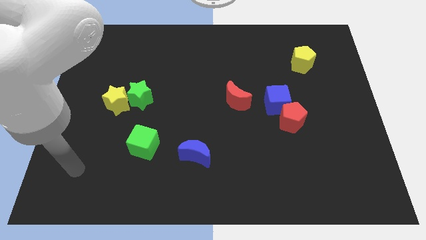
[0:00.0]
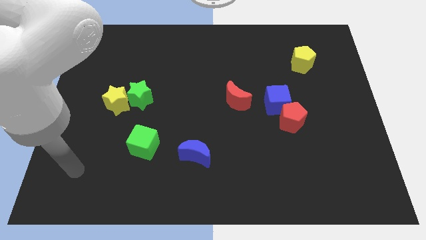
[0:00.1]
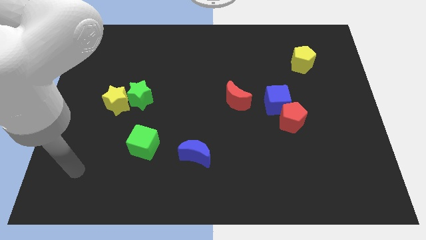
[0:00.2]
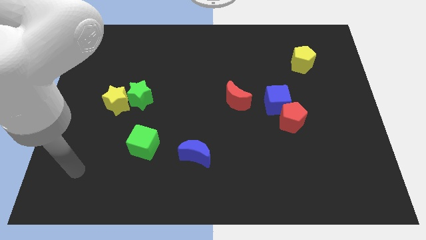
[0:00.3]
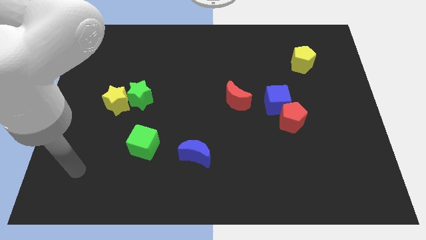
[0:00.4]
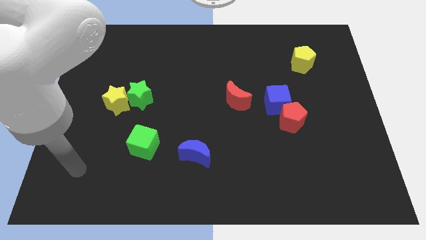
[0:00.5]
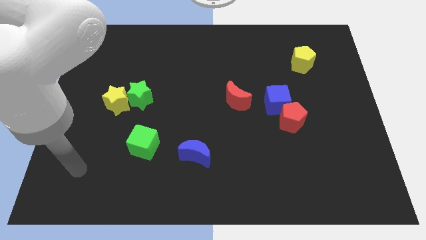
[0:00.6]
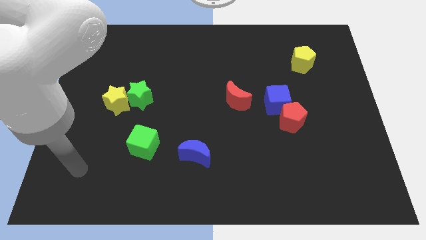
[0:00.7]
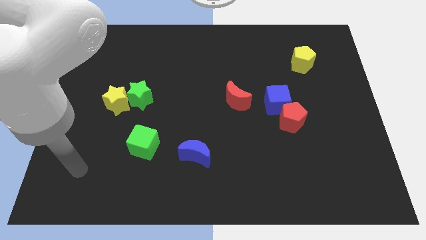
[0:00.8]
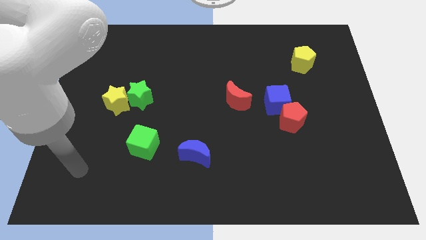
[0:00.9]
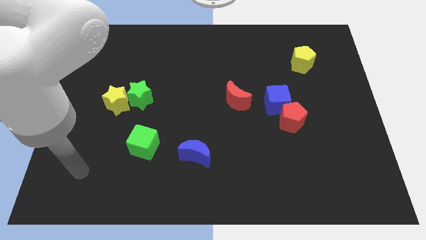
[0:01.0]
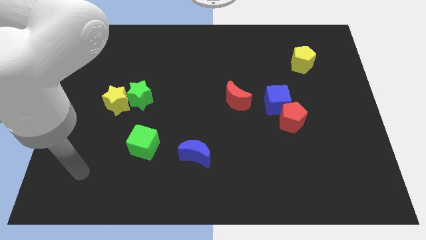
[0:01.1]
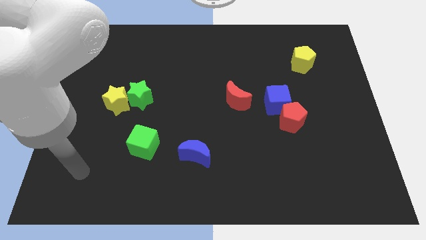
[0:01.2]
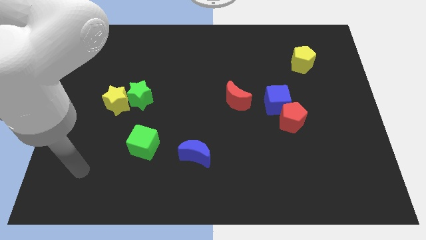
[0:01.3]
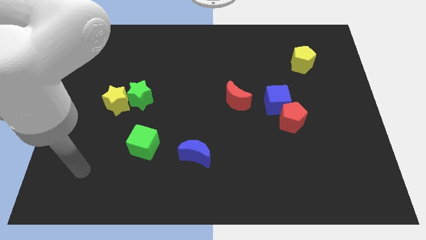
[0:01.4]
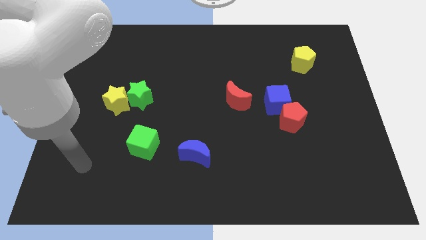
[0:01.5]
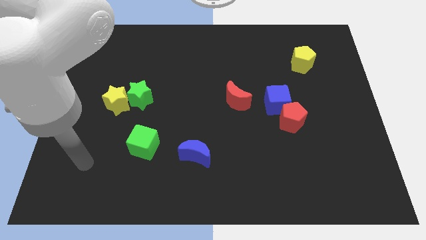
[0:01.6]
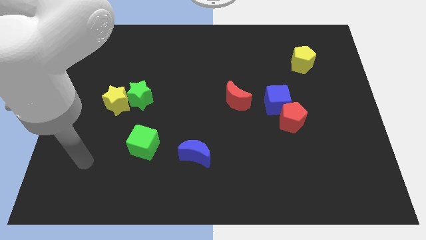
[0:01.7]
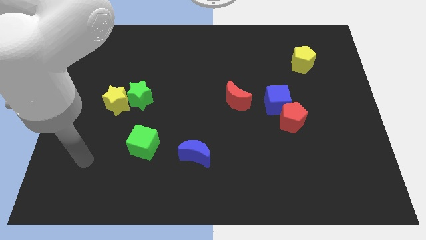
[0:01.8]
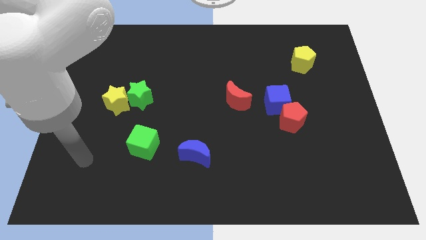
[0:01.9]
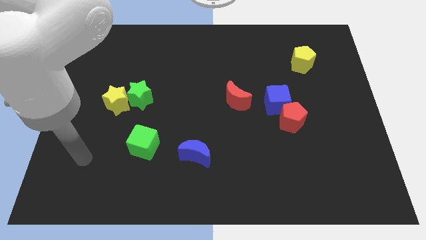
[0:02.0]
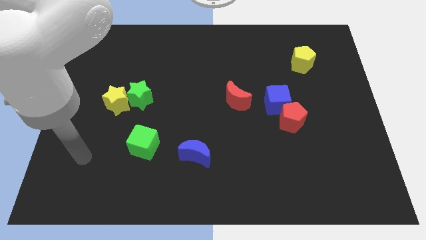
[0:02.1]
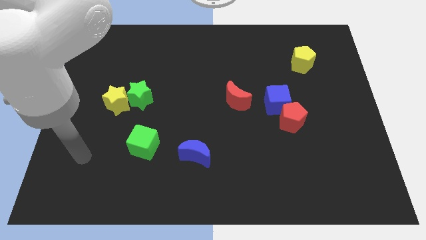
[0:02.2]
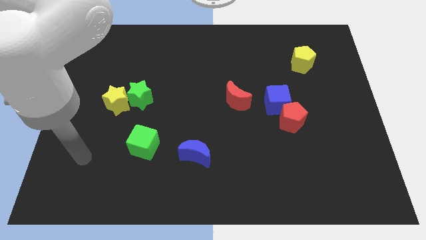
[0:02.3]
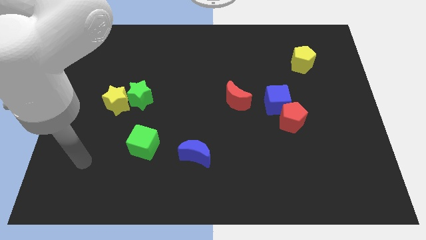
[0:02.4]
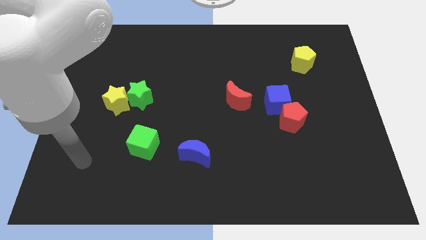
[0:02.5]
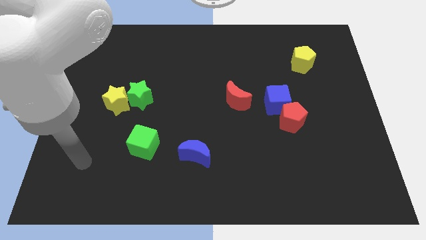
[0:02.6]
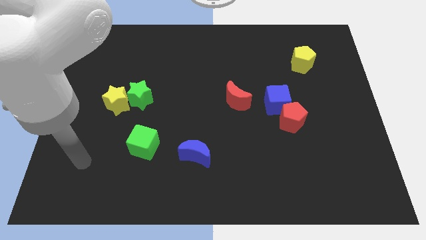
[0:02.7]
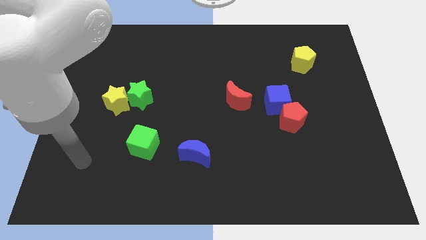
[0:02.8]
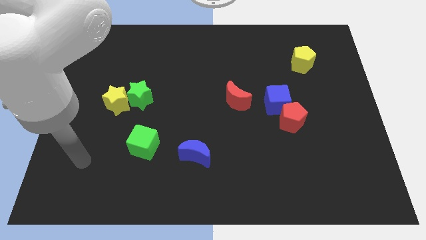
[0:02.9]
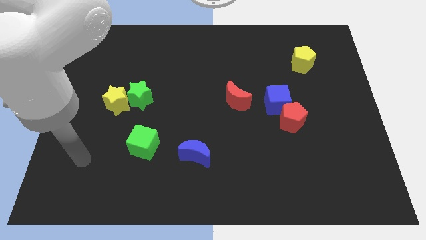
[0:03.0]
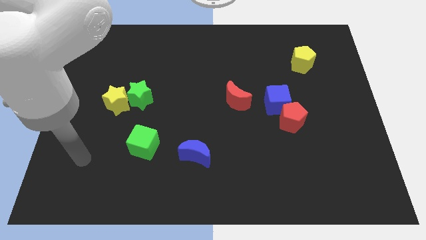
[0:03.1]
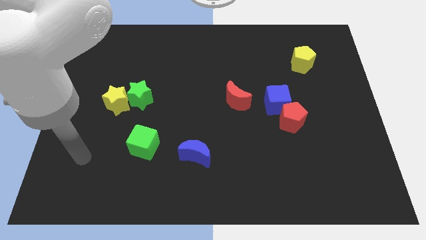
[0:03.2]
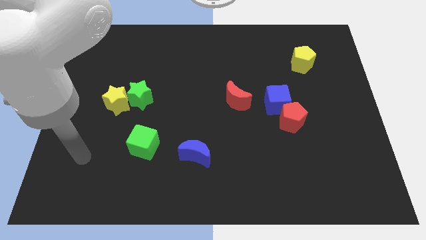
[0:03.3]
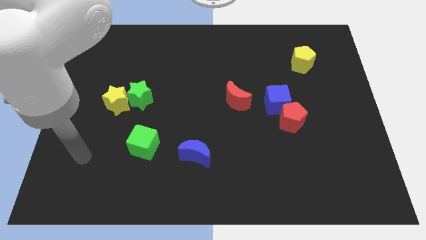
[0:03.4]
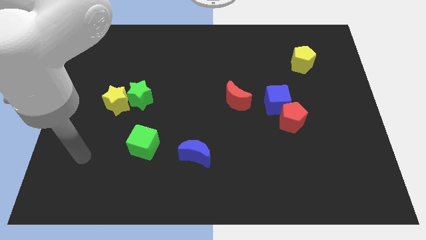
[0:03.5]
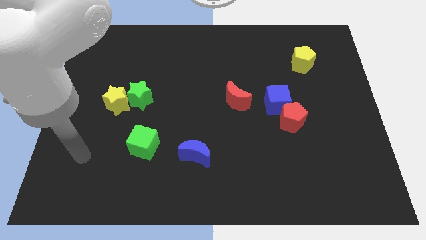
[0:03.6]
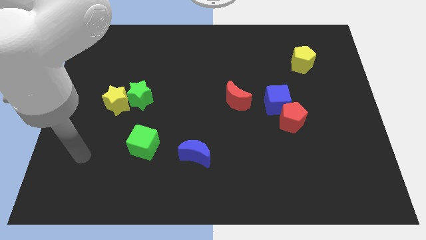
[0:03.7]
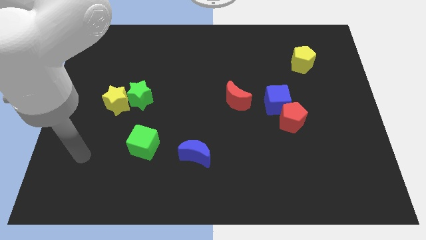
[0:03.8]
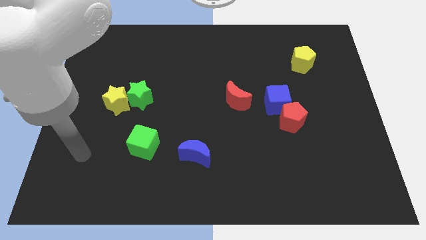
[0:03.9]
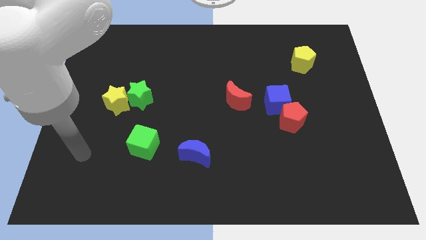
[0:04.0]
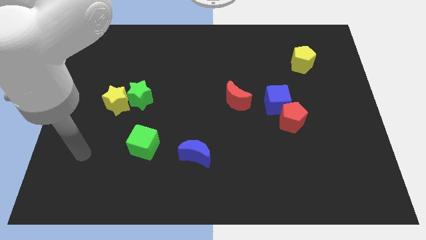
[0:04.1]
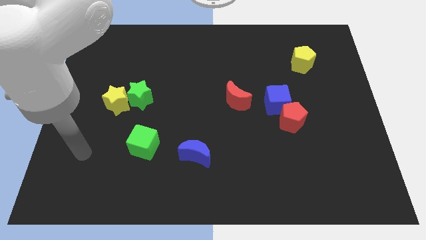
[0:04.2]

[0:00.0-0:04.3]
move the arm towards the left of green cube

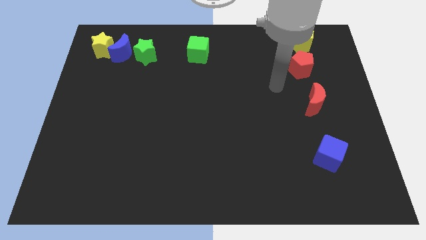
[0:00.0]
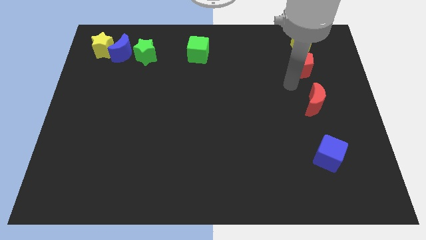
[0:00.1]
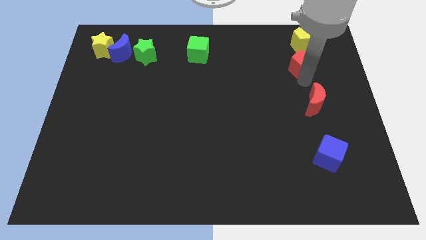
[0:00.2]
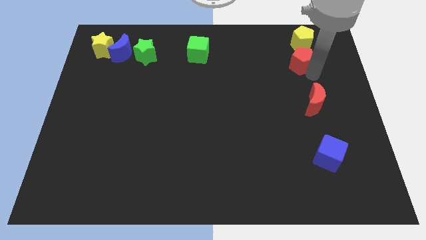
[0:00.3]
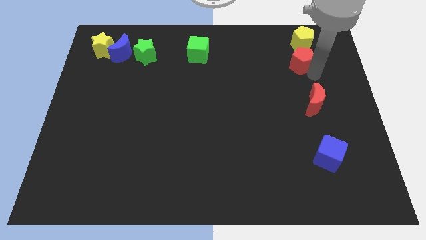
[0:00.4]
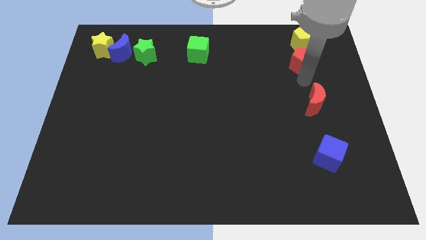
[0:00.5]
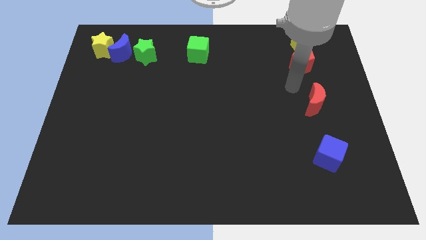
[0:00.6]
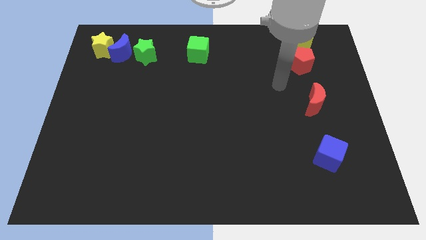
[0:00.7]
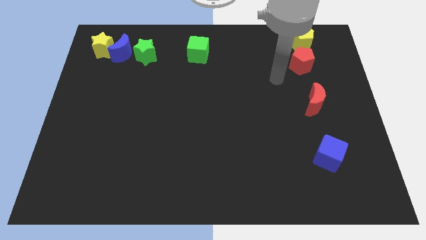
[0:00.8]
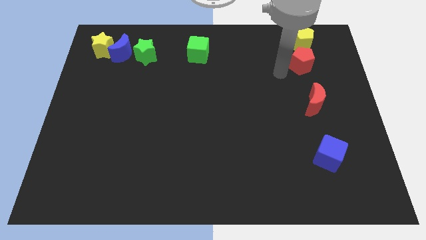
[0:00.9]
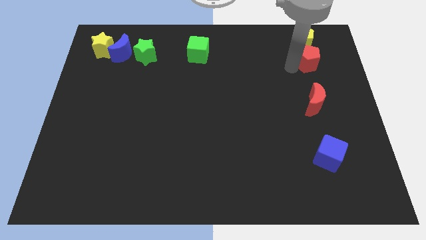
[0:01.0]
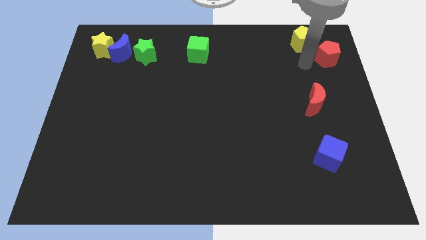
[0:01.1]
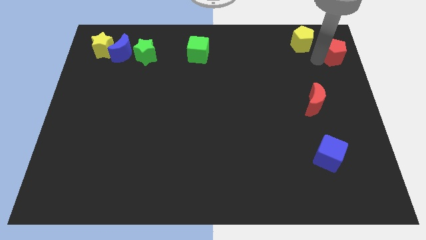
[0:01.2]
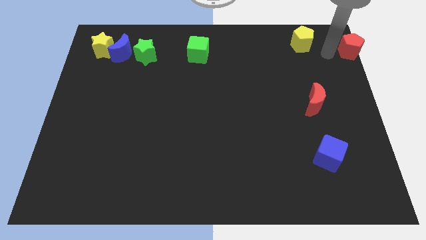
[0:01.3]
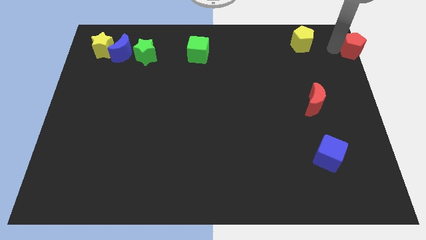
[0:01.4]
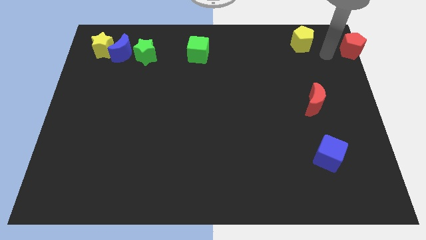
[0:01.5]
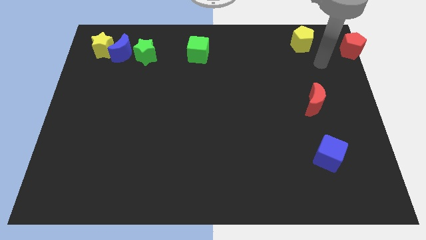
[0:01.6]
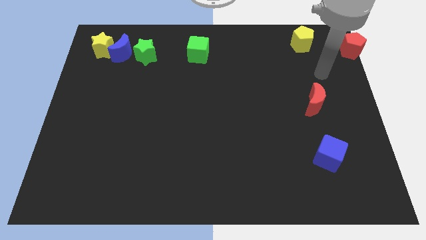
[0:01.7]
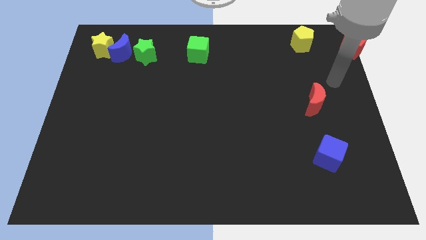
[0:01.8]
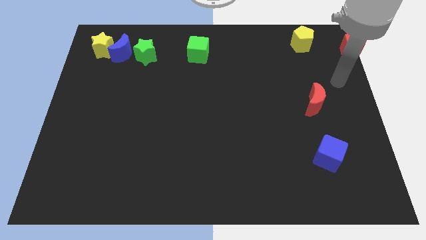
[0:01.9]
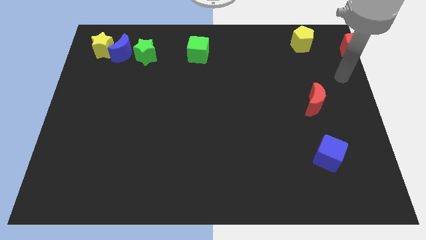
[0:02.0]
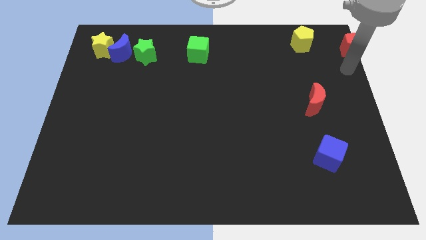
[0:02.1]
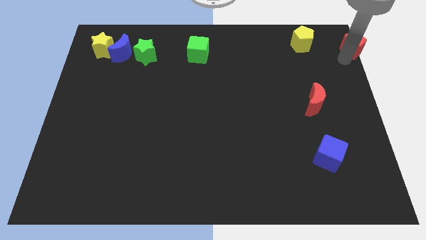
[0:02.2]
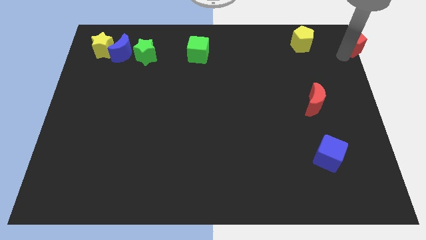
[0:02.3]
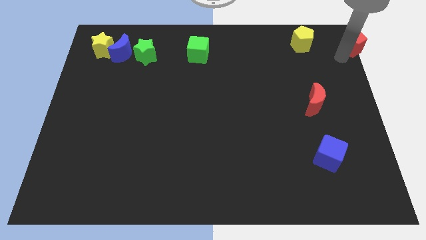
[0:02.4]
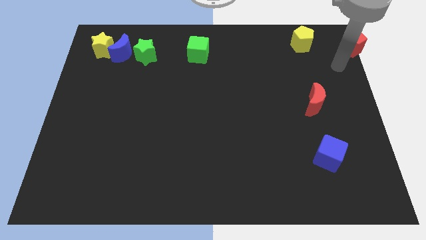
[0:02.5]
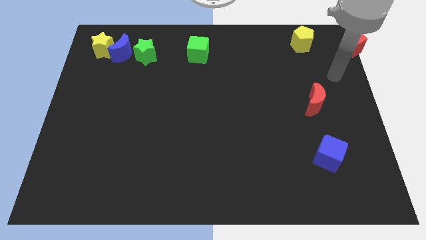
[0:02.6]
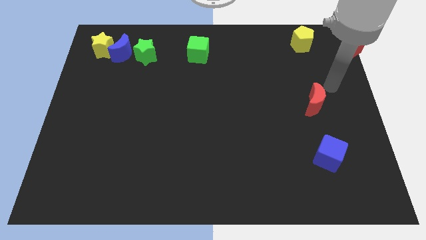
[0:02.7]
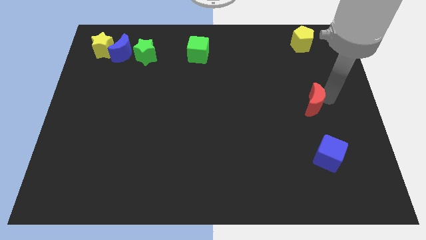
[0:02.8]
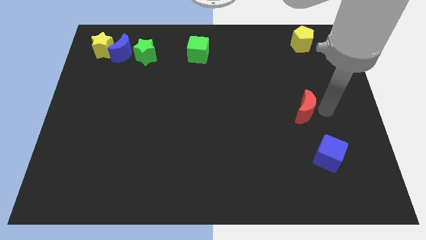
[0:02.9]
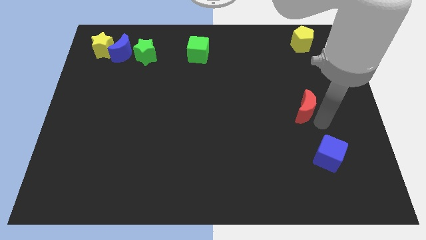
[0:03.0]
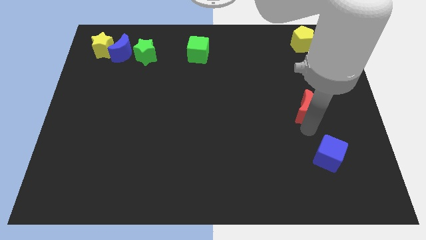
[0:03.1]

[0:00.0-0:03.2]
move the red pentagon to the top right of the board

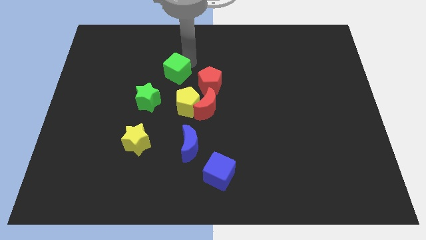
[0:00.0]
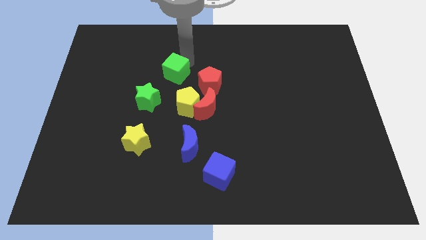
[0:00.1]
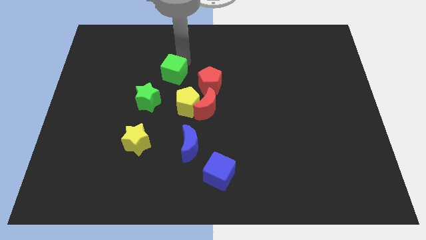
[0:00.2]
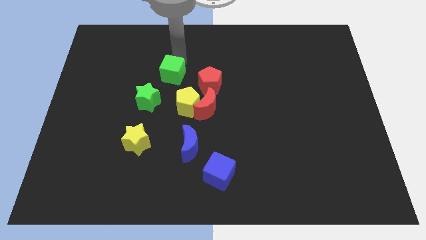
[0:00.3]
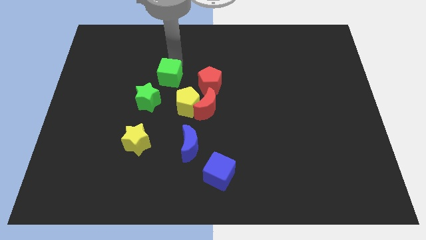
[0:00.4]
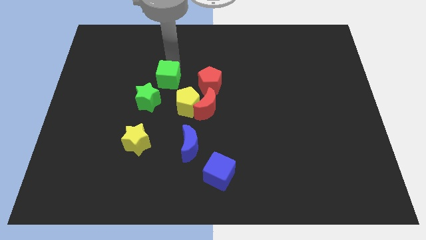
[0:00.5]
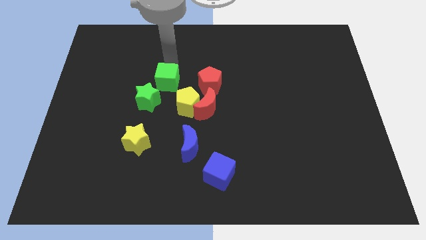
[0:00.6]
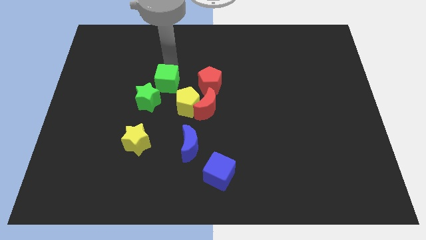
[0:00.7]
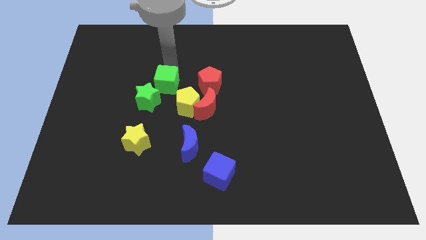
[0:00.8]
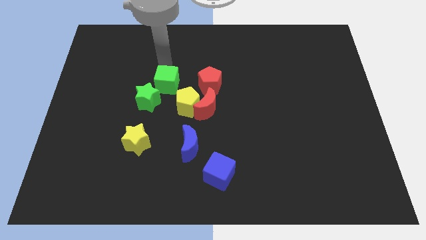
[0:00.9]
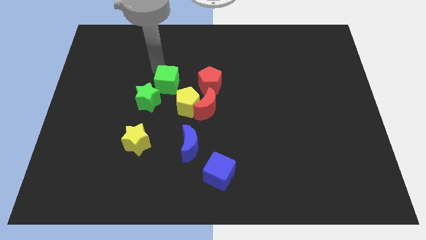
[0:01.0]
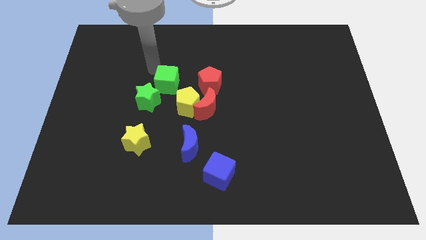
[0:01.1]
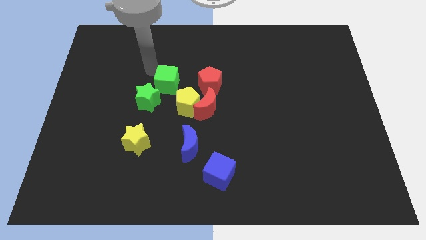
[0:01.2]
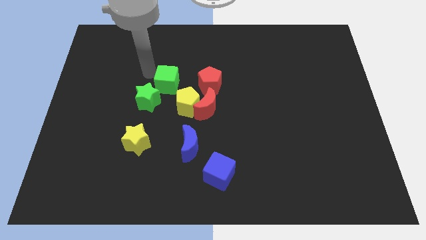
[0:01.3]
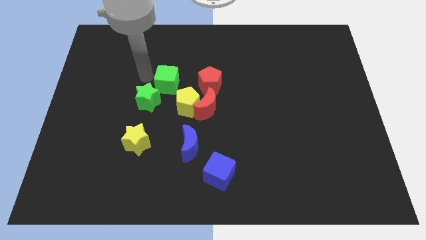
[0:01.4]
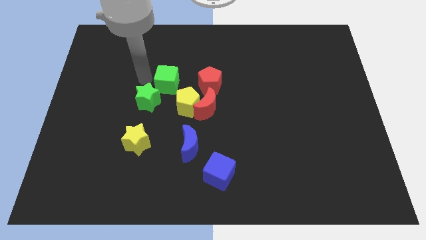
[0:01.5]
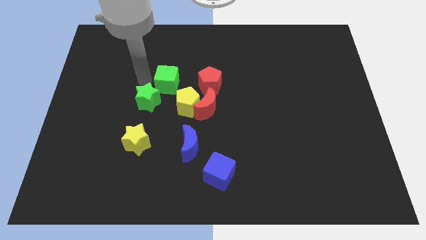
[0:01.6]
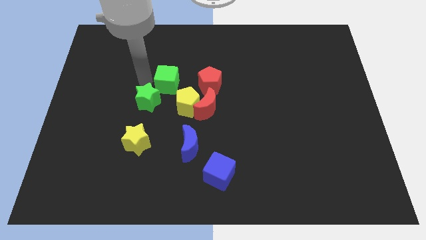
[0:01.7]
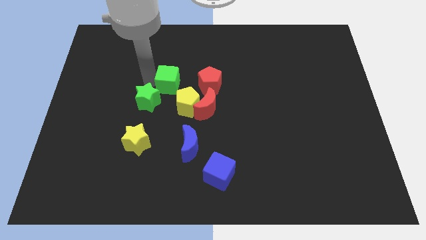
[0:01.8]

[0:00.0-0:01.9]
move the green cube towards the top of the green star
